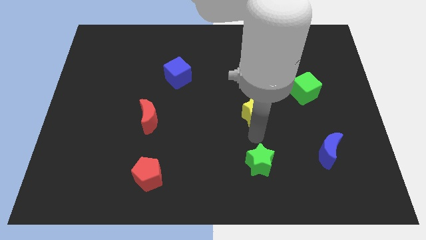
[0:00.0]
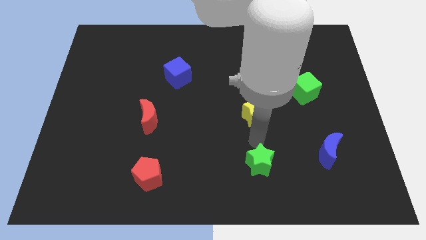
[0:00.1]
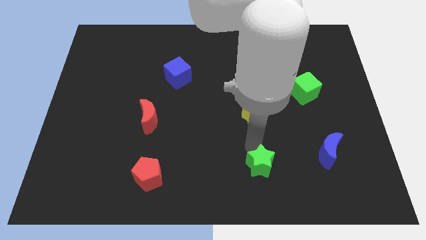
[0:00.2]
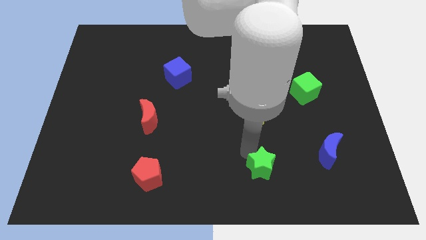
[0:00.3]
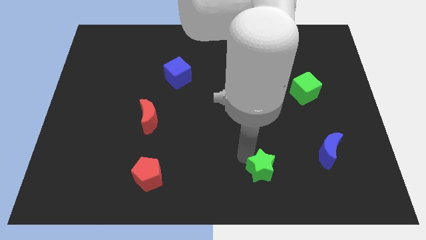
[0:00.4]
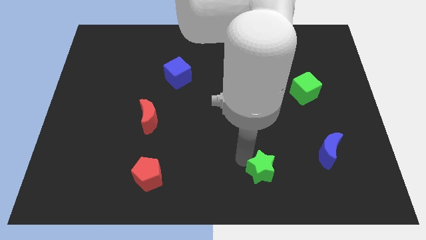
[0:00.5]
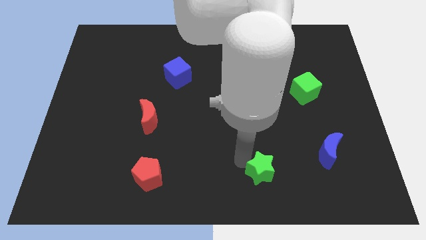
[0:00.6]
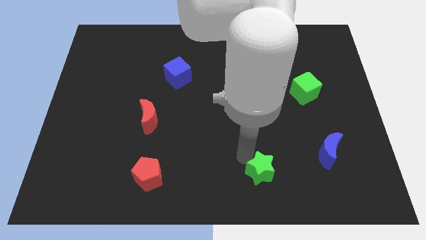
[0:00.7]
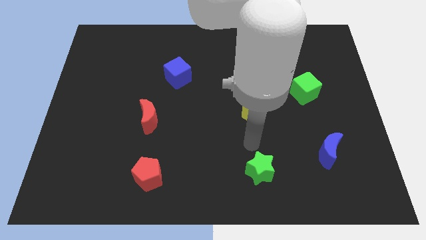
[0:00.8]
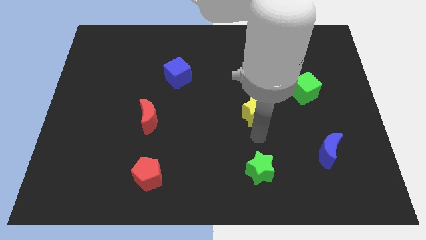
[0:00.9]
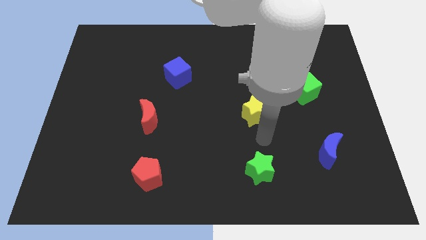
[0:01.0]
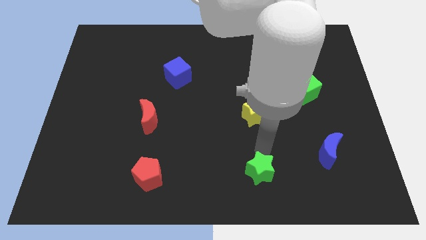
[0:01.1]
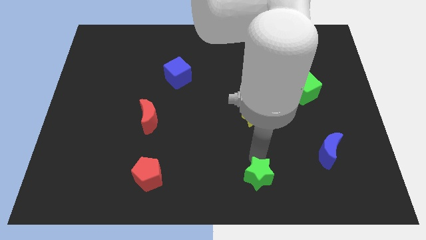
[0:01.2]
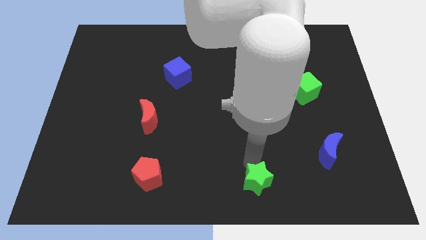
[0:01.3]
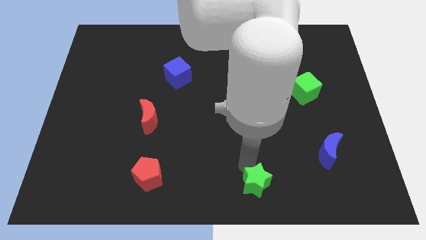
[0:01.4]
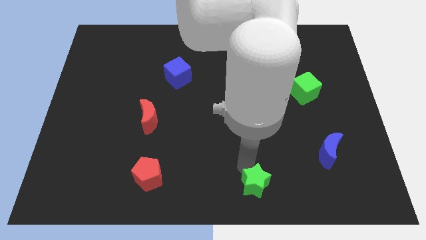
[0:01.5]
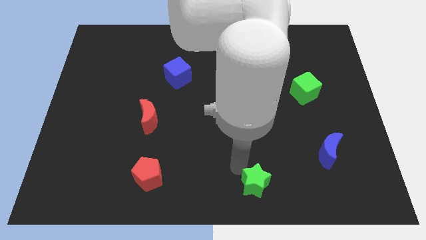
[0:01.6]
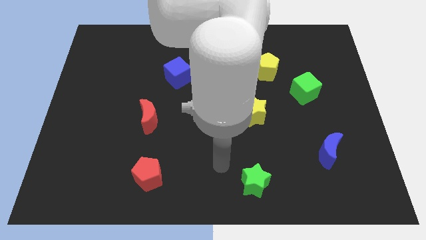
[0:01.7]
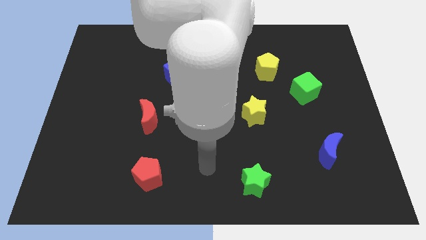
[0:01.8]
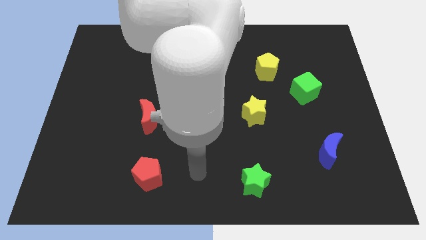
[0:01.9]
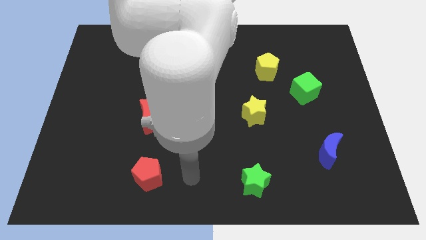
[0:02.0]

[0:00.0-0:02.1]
move green star to the bottom middle of the board

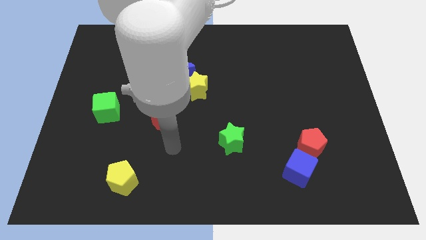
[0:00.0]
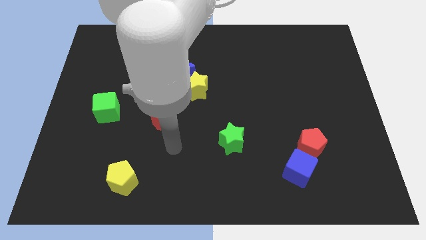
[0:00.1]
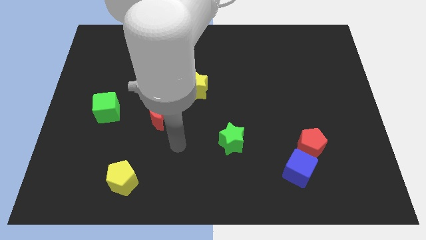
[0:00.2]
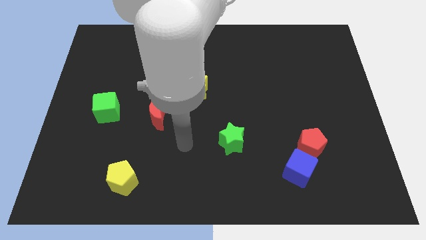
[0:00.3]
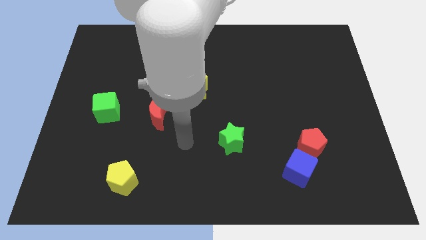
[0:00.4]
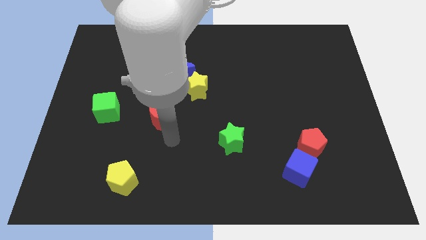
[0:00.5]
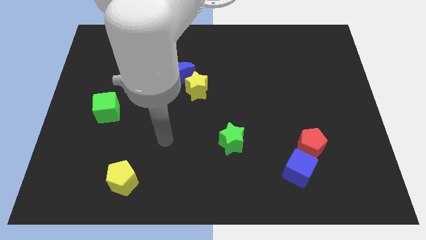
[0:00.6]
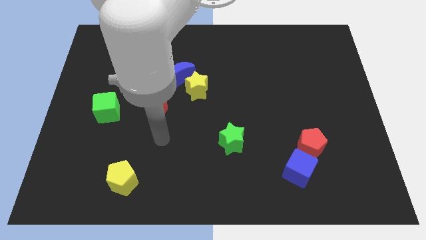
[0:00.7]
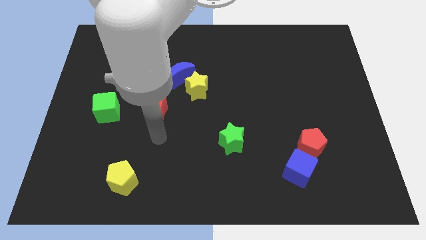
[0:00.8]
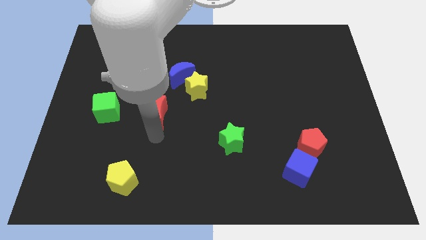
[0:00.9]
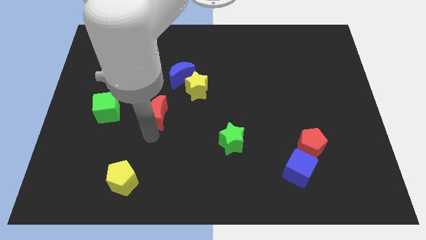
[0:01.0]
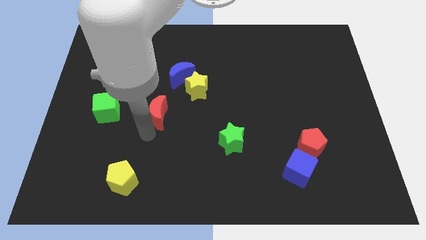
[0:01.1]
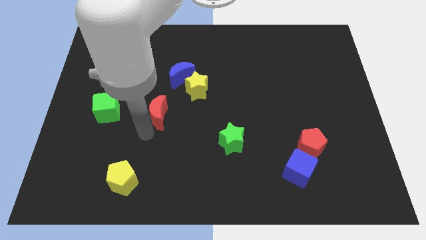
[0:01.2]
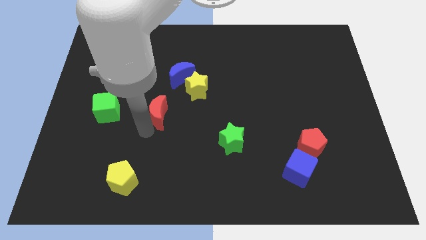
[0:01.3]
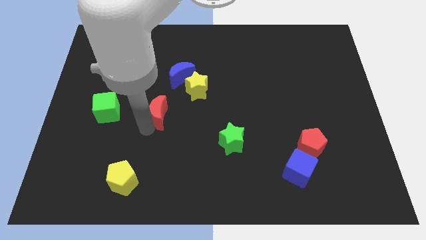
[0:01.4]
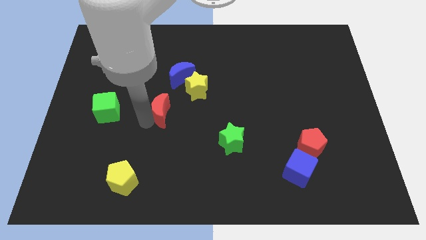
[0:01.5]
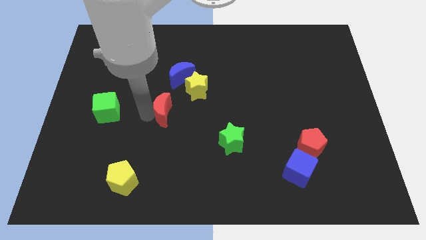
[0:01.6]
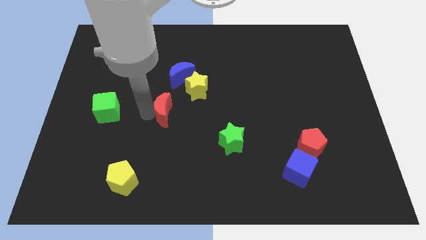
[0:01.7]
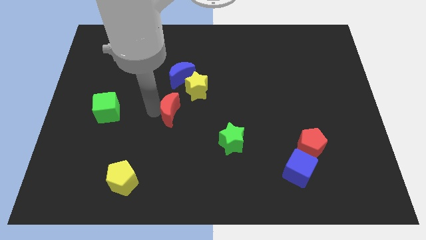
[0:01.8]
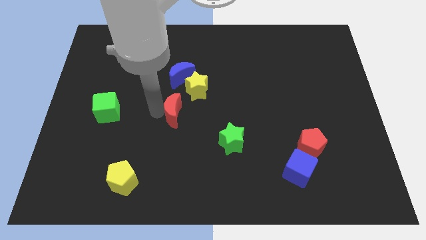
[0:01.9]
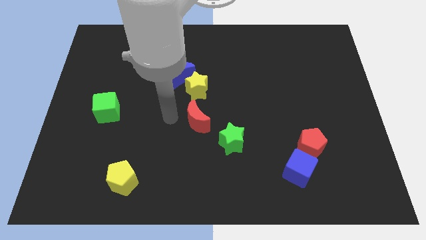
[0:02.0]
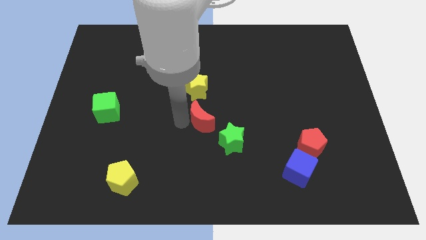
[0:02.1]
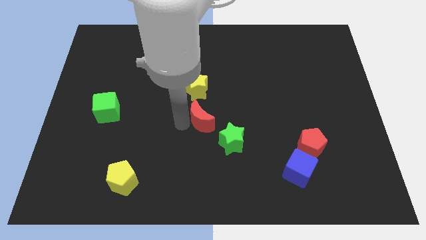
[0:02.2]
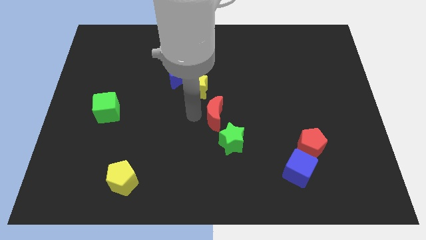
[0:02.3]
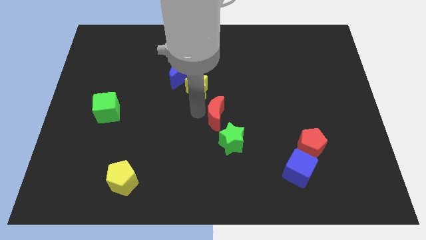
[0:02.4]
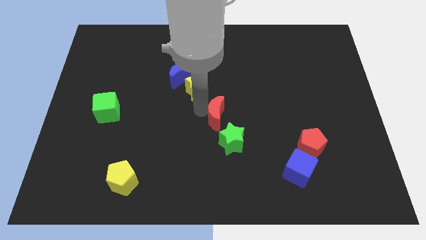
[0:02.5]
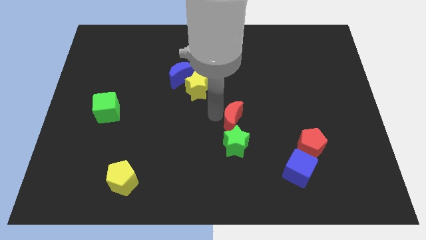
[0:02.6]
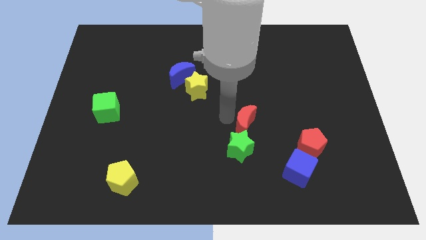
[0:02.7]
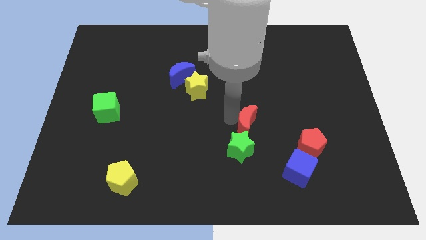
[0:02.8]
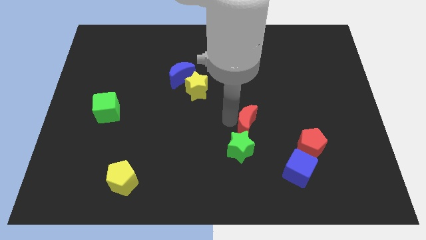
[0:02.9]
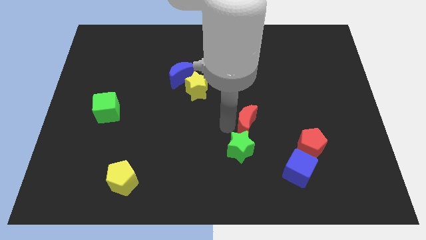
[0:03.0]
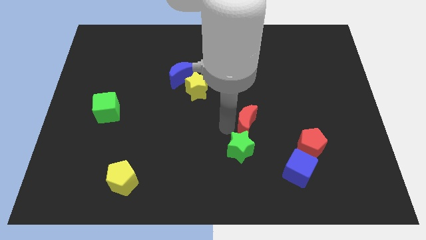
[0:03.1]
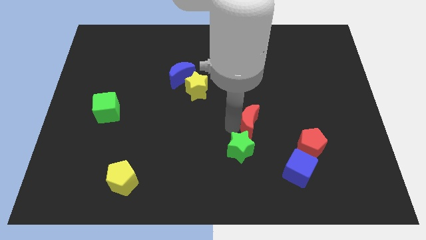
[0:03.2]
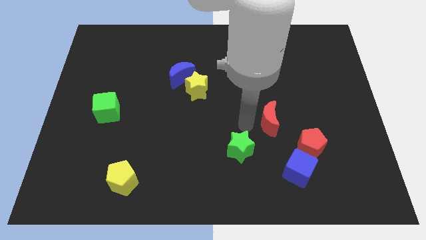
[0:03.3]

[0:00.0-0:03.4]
point your arm above green star

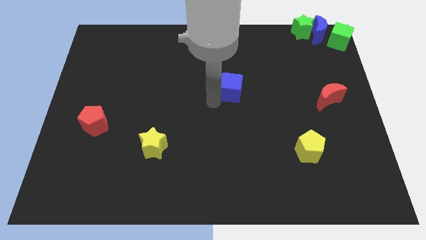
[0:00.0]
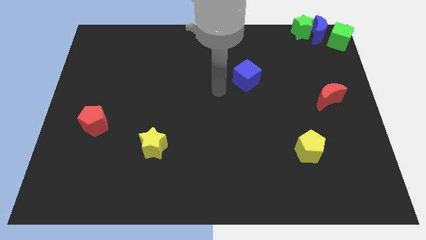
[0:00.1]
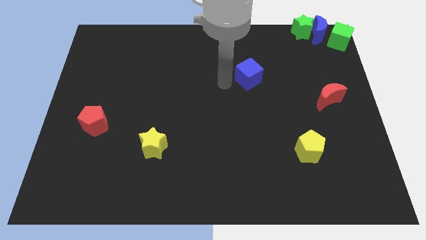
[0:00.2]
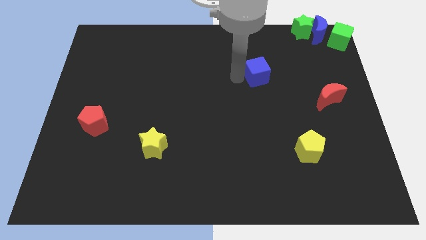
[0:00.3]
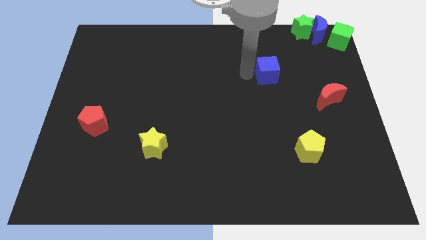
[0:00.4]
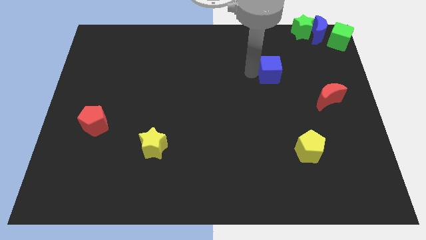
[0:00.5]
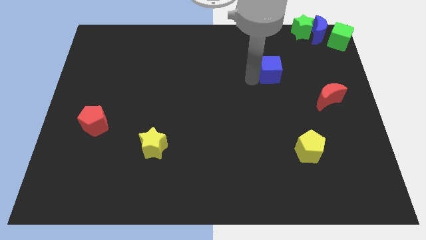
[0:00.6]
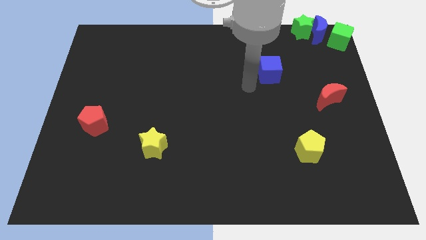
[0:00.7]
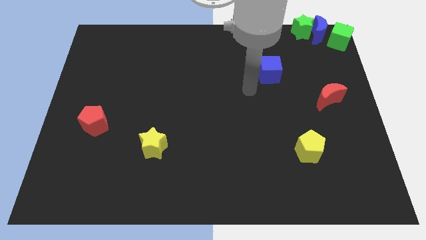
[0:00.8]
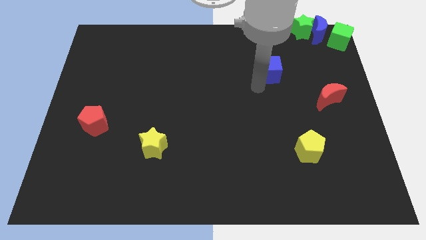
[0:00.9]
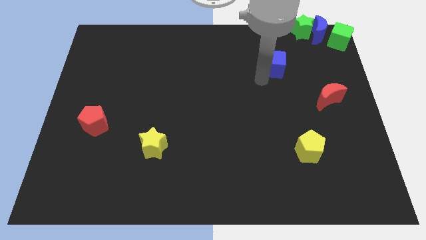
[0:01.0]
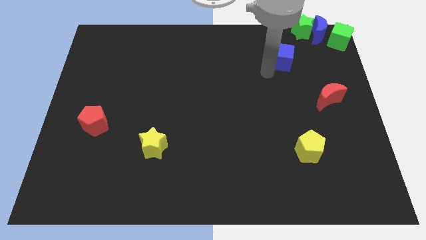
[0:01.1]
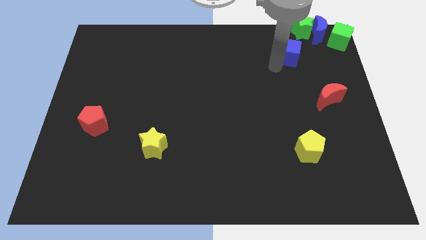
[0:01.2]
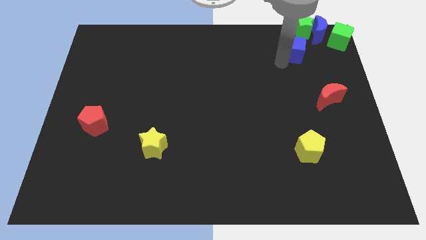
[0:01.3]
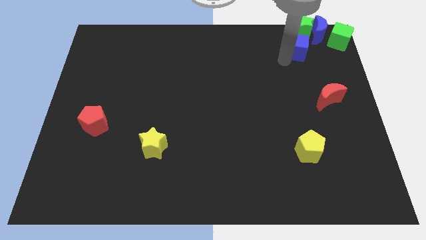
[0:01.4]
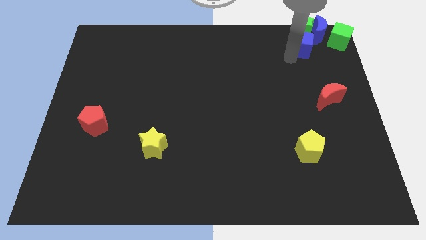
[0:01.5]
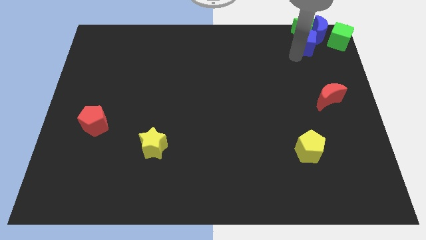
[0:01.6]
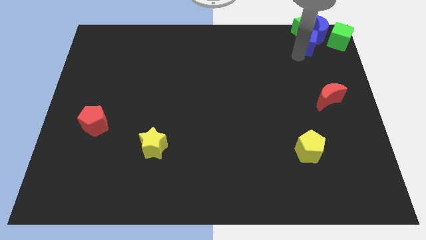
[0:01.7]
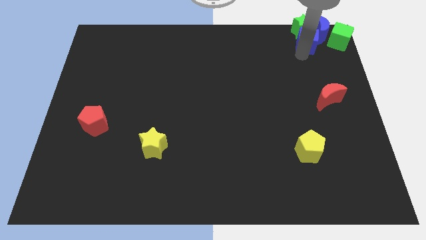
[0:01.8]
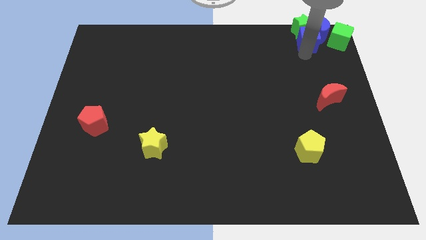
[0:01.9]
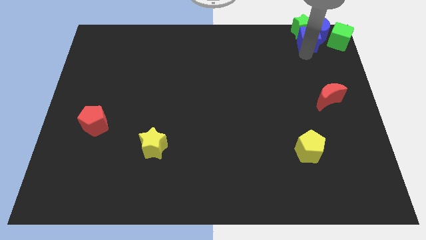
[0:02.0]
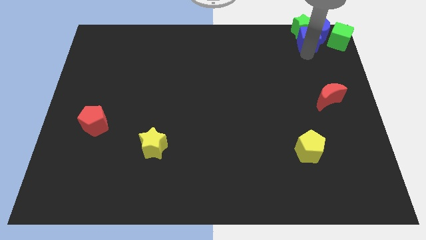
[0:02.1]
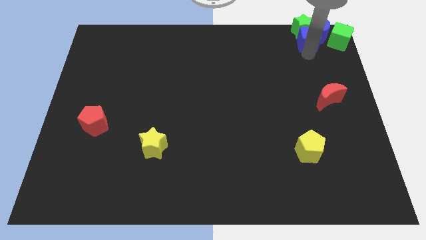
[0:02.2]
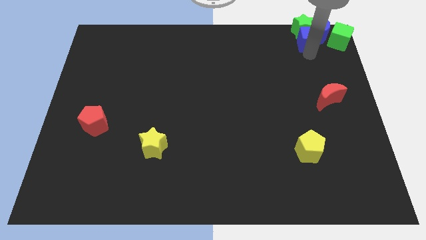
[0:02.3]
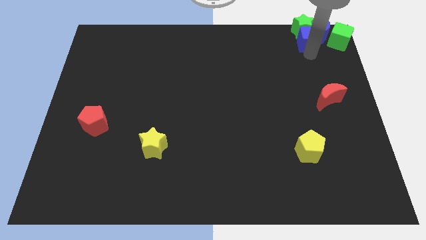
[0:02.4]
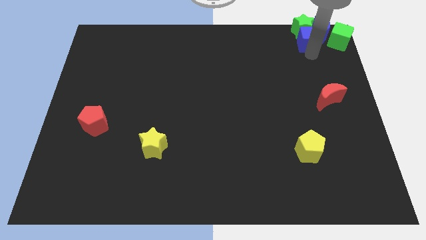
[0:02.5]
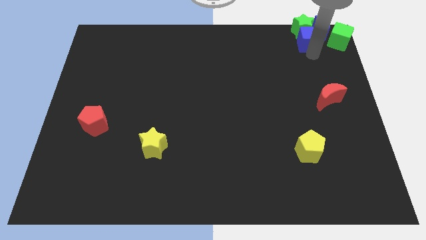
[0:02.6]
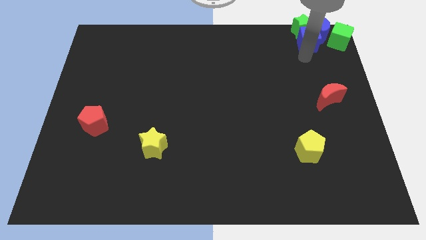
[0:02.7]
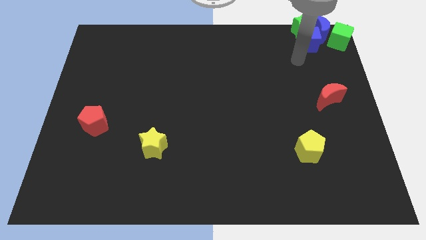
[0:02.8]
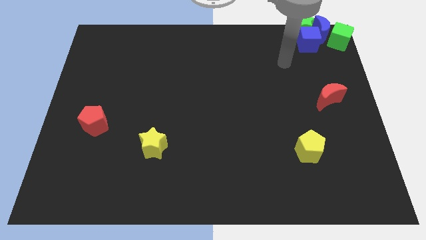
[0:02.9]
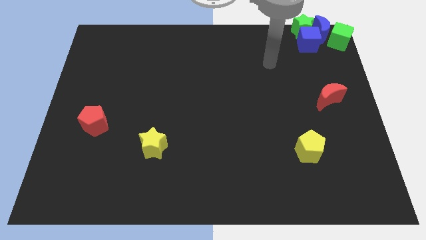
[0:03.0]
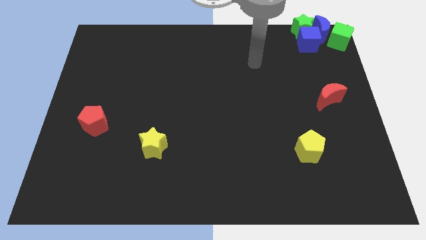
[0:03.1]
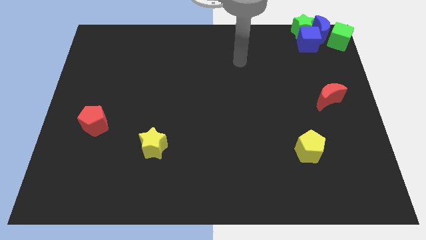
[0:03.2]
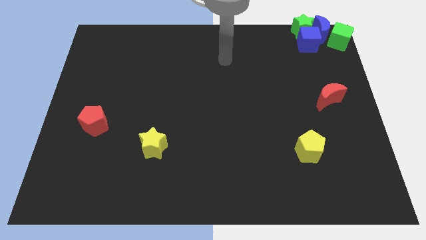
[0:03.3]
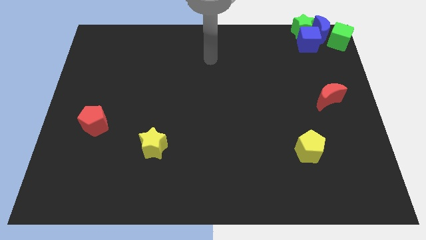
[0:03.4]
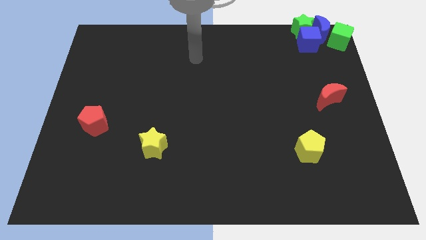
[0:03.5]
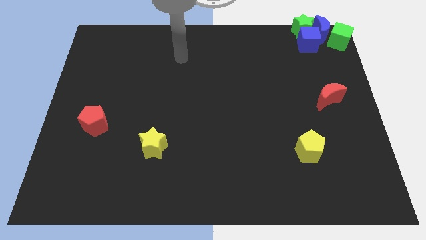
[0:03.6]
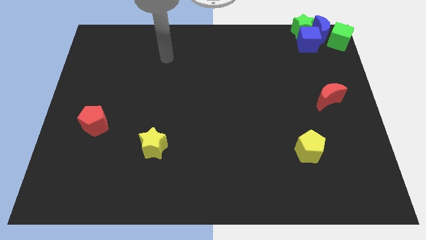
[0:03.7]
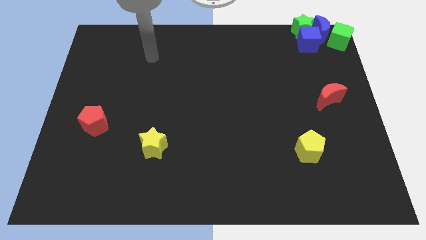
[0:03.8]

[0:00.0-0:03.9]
push blue cube into blue crescent
